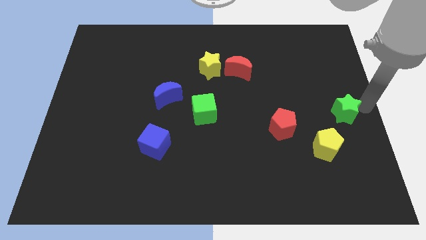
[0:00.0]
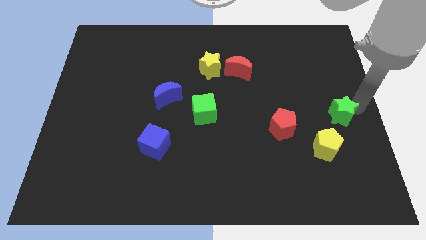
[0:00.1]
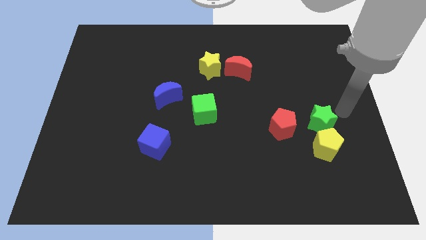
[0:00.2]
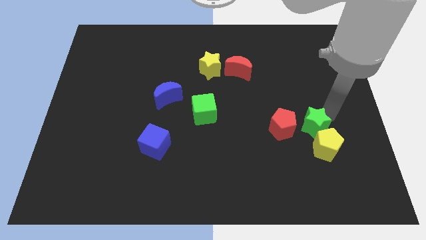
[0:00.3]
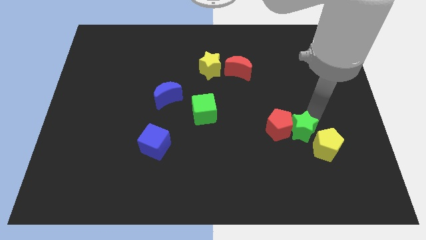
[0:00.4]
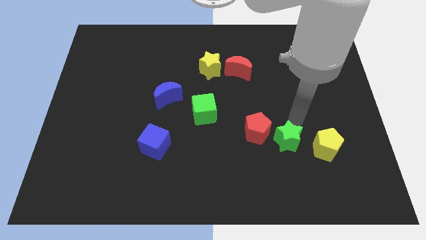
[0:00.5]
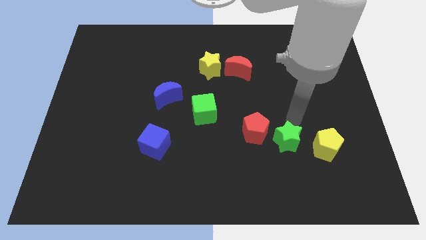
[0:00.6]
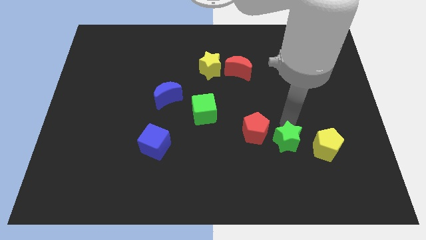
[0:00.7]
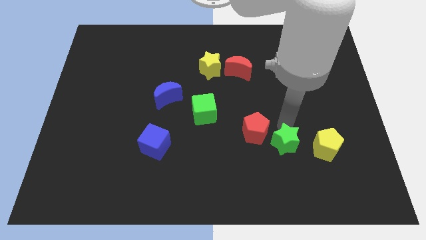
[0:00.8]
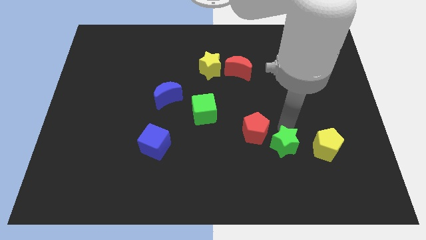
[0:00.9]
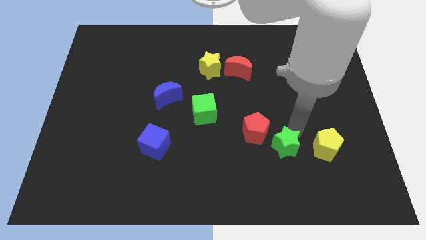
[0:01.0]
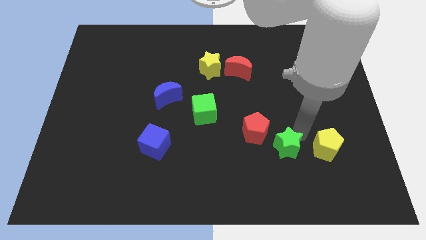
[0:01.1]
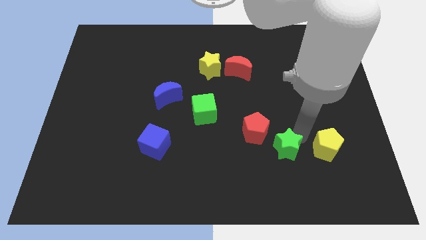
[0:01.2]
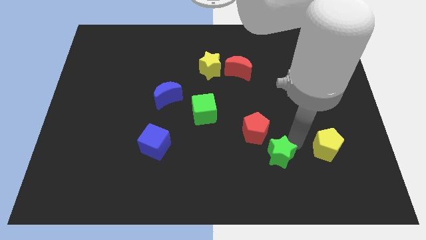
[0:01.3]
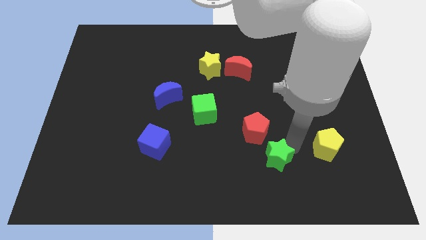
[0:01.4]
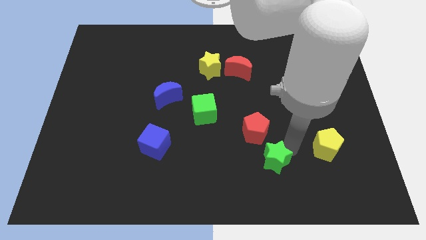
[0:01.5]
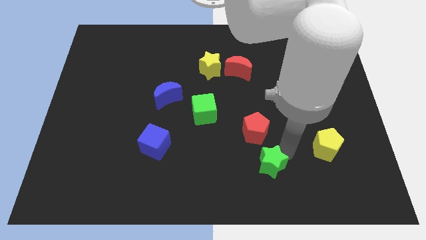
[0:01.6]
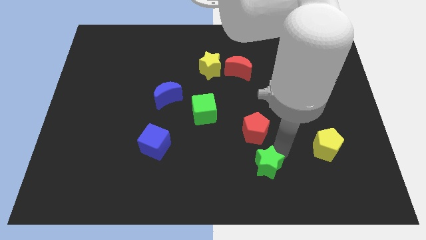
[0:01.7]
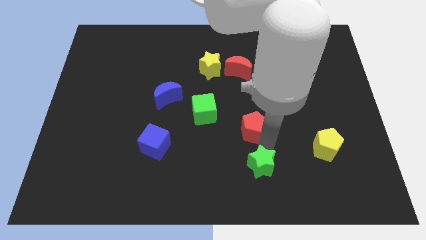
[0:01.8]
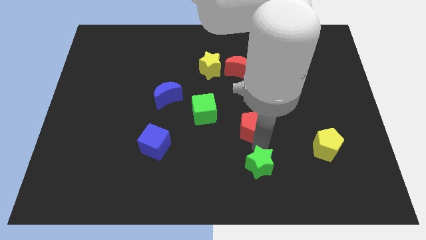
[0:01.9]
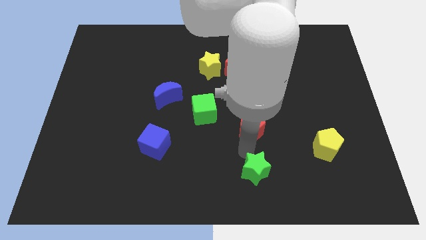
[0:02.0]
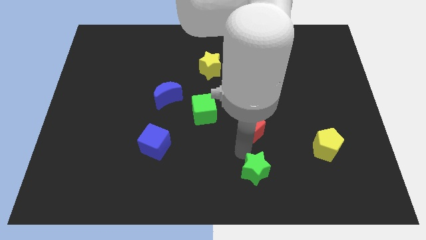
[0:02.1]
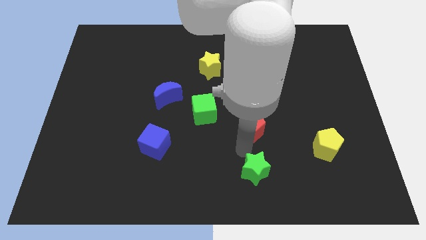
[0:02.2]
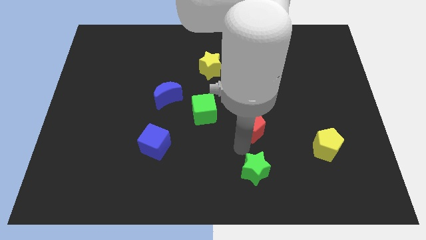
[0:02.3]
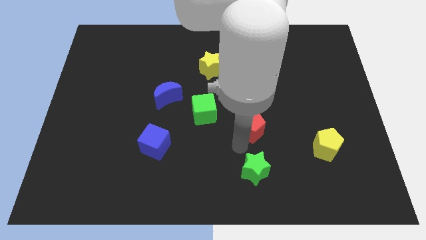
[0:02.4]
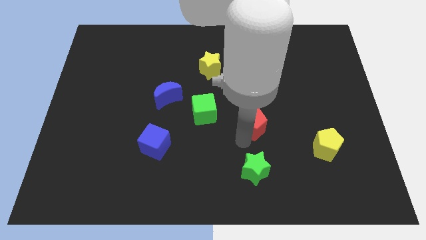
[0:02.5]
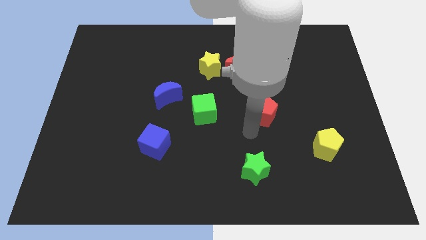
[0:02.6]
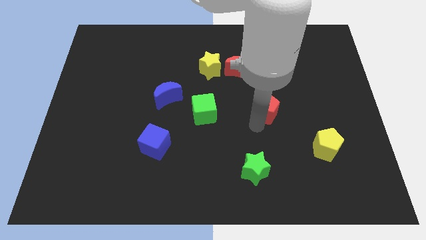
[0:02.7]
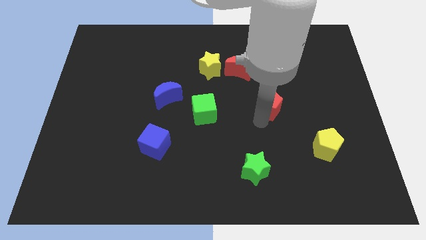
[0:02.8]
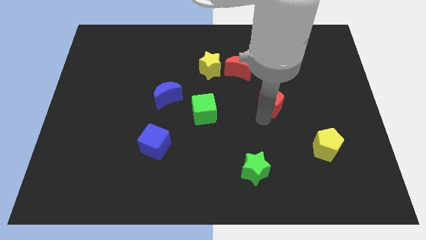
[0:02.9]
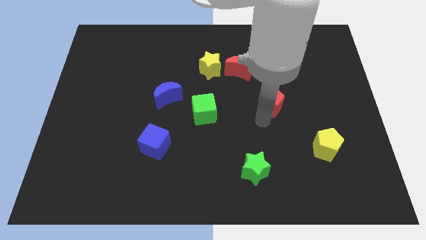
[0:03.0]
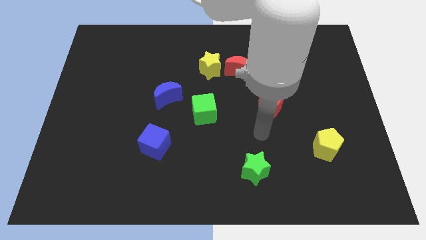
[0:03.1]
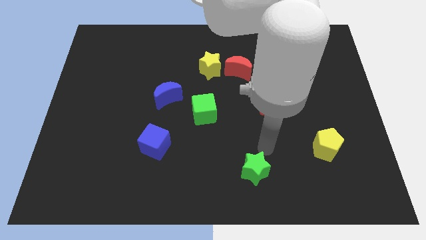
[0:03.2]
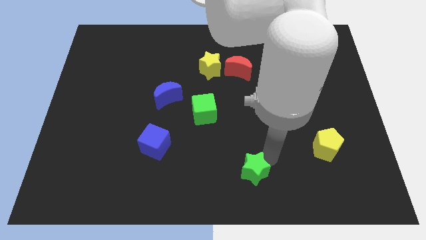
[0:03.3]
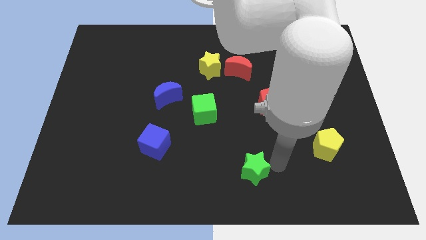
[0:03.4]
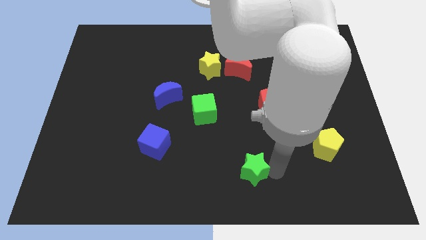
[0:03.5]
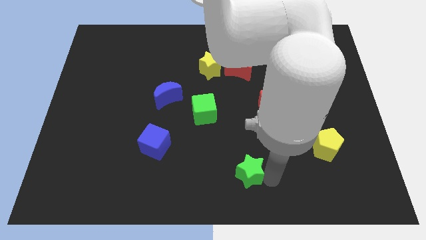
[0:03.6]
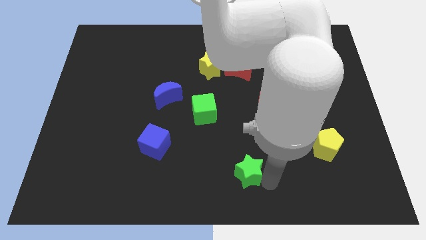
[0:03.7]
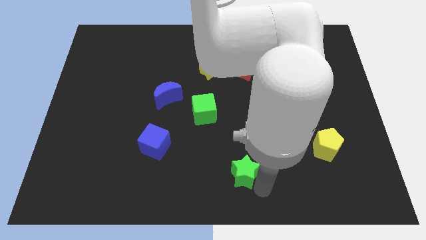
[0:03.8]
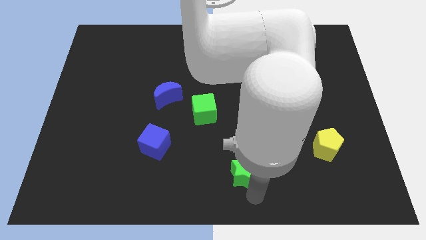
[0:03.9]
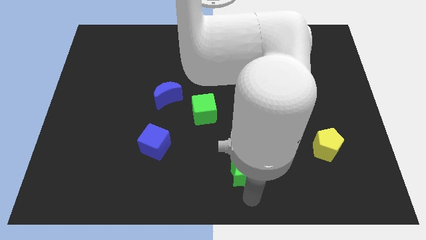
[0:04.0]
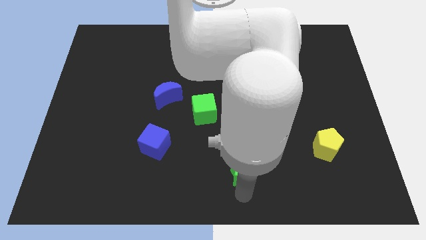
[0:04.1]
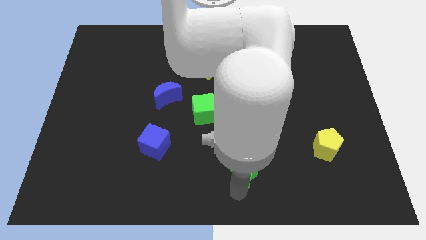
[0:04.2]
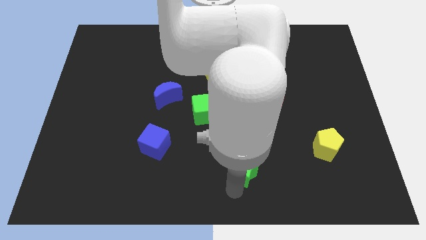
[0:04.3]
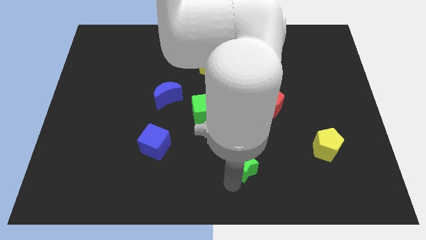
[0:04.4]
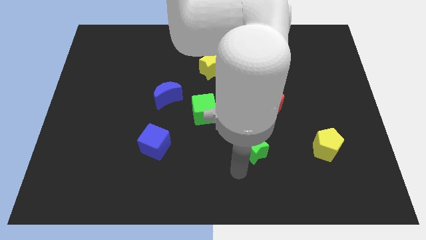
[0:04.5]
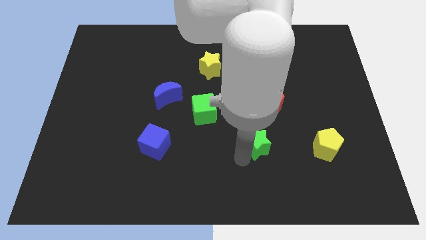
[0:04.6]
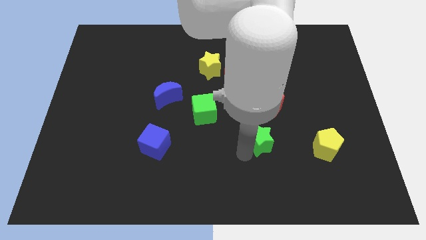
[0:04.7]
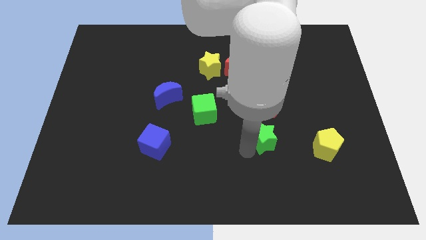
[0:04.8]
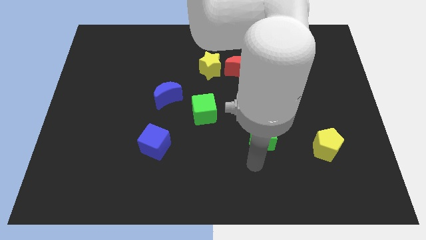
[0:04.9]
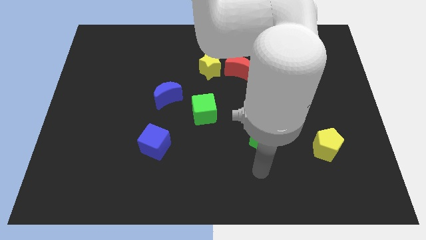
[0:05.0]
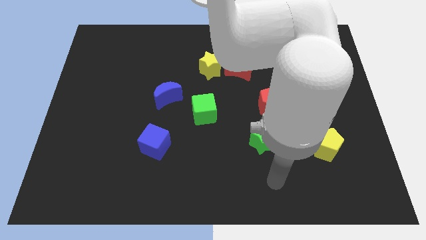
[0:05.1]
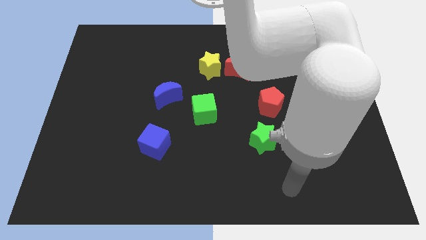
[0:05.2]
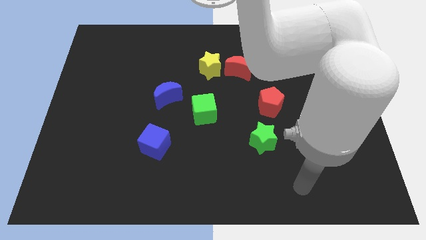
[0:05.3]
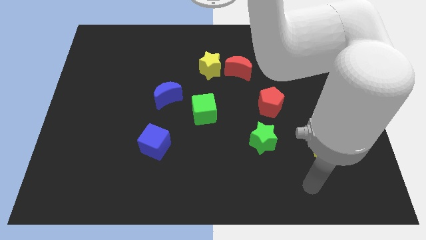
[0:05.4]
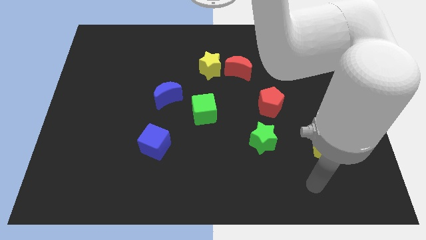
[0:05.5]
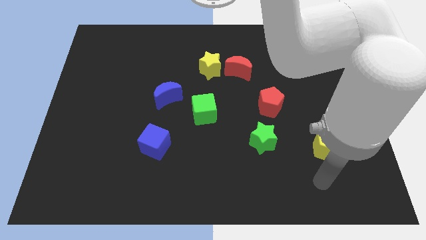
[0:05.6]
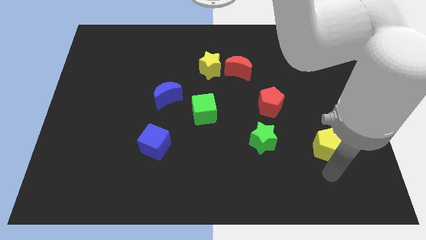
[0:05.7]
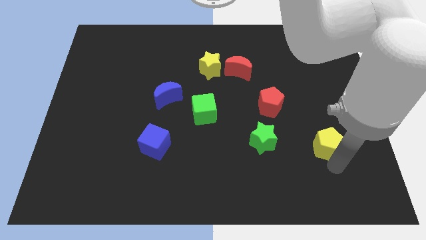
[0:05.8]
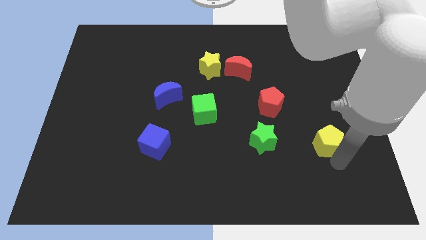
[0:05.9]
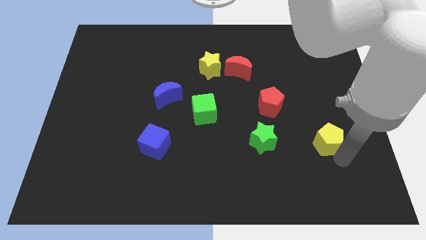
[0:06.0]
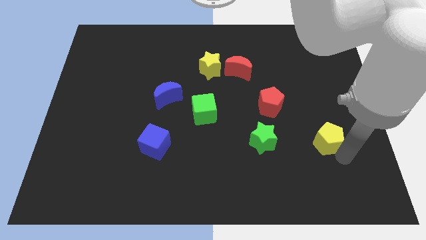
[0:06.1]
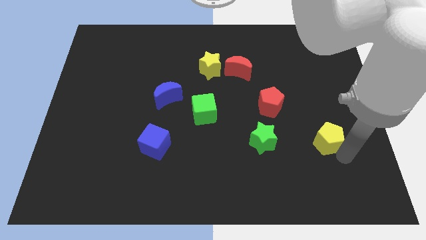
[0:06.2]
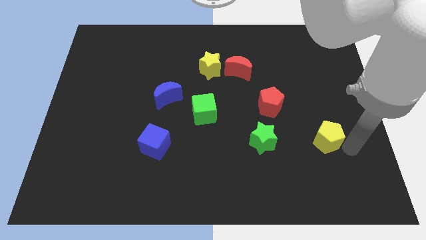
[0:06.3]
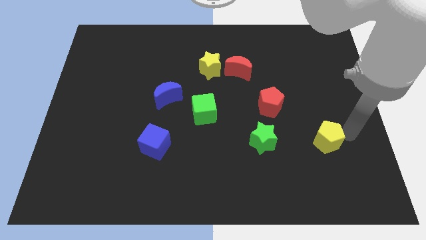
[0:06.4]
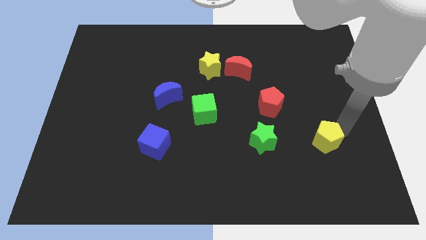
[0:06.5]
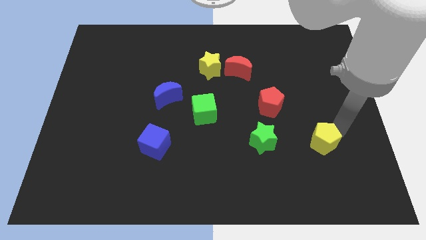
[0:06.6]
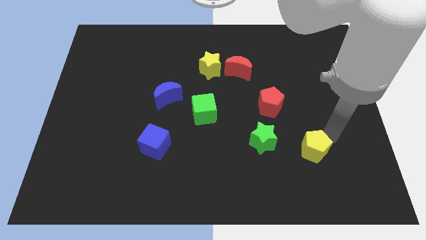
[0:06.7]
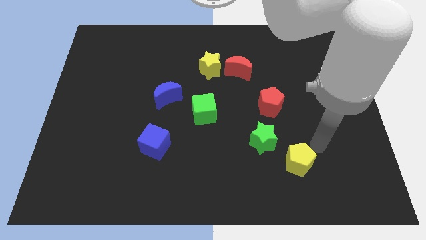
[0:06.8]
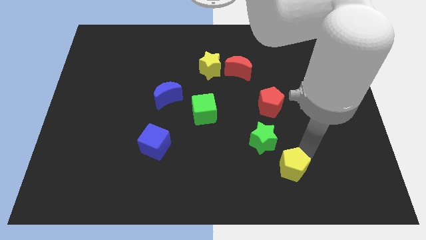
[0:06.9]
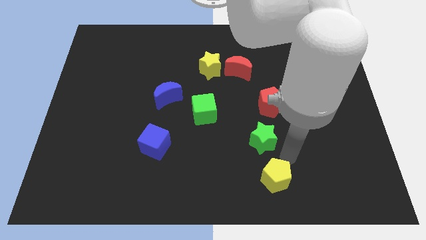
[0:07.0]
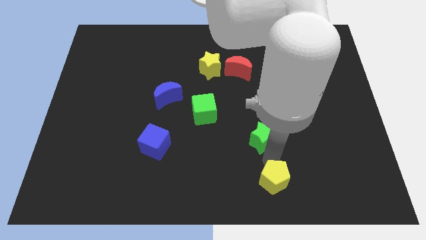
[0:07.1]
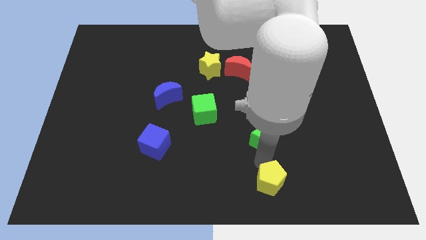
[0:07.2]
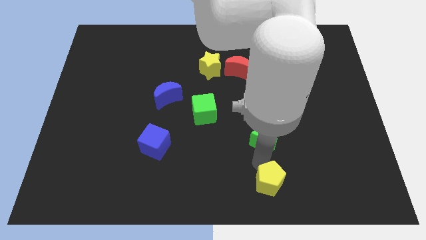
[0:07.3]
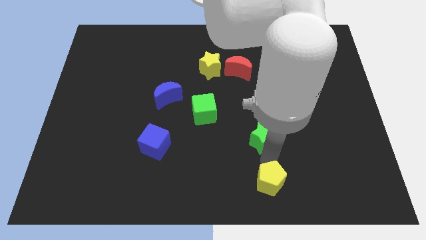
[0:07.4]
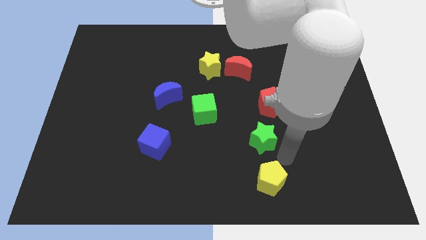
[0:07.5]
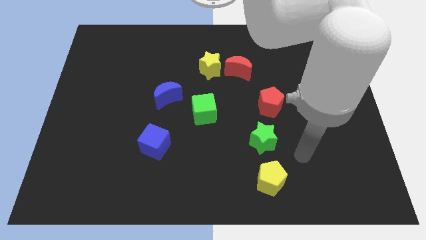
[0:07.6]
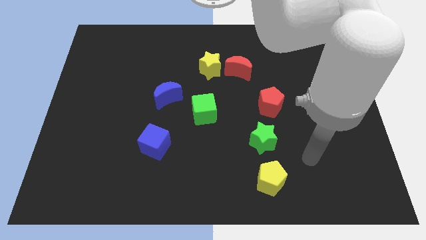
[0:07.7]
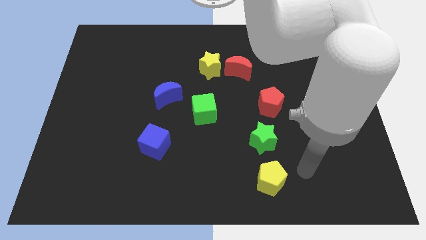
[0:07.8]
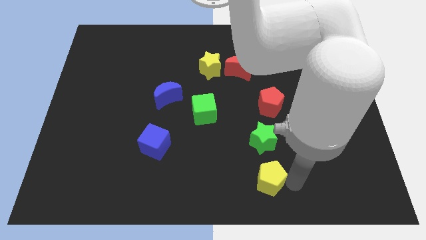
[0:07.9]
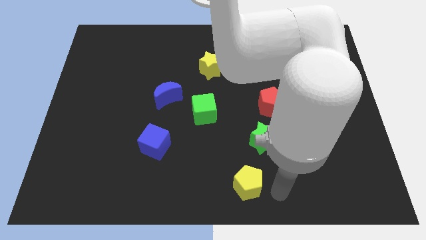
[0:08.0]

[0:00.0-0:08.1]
form a diagonal line using the red pentagon green star and the yellow pentagon

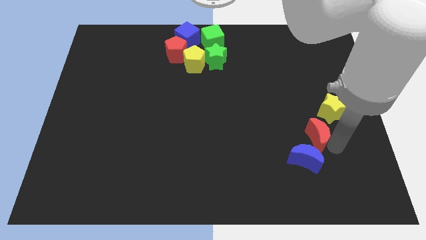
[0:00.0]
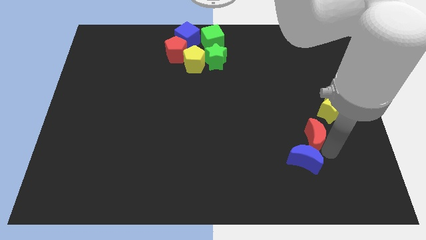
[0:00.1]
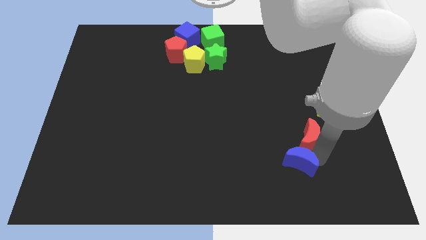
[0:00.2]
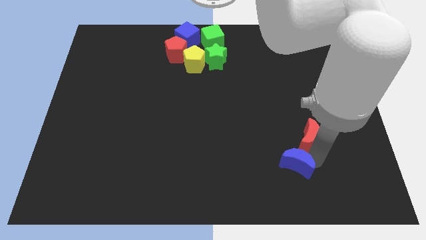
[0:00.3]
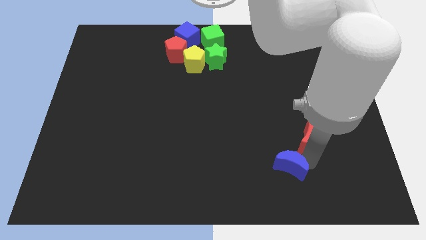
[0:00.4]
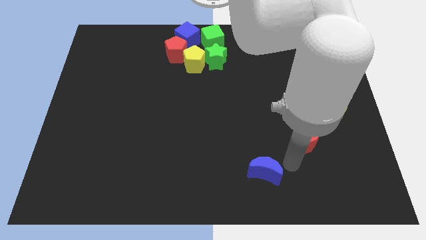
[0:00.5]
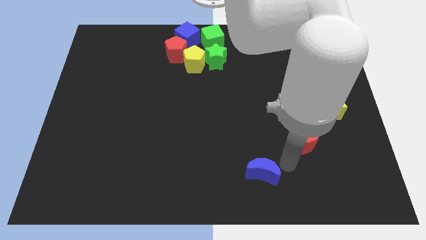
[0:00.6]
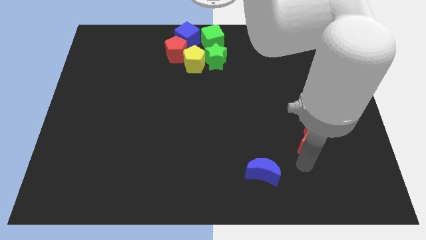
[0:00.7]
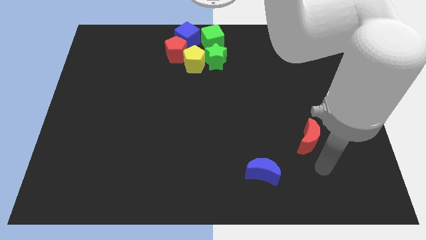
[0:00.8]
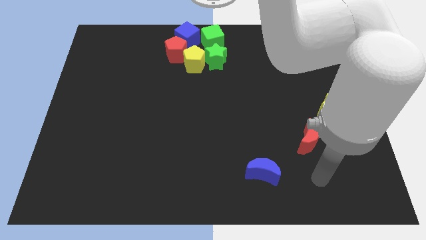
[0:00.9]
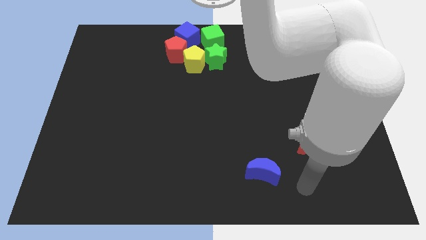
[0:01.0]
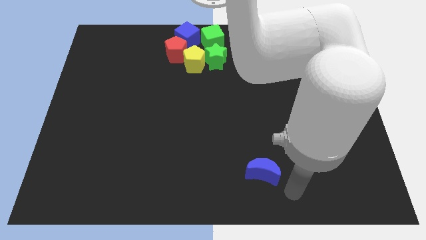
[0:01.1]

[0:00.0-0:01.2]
separate the blue crescent from the red crescent
